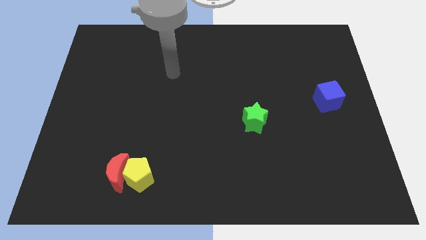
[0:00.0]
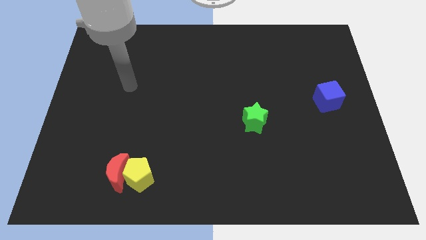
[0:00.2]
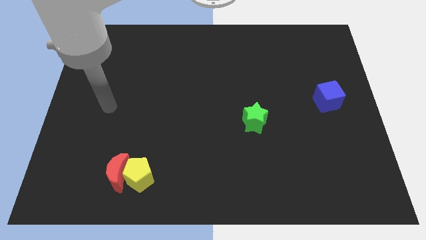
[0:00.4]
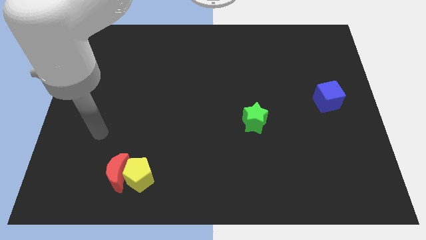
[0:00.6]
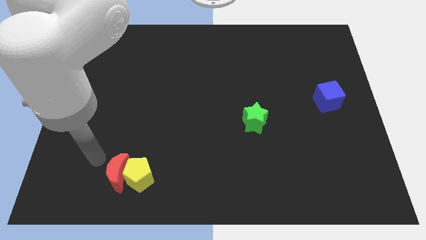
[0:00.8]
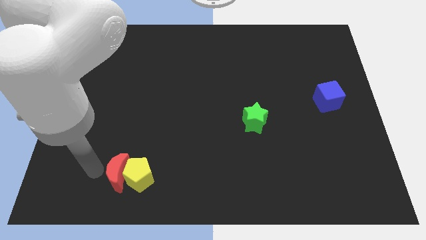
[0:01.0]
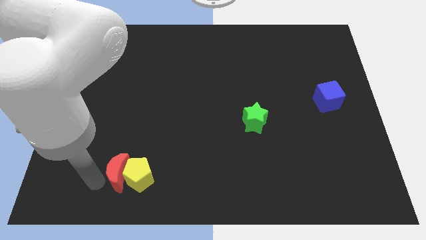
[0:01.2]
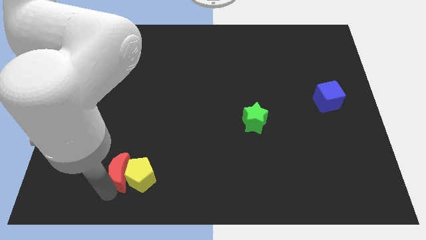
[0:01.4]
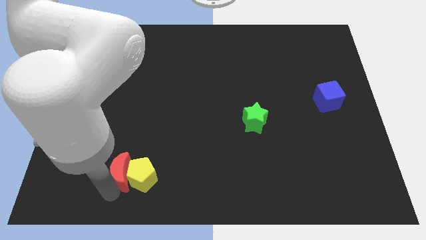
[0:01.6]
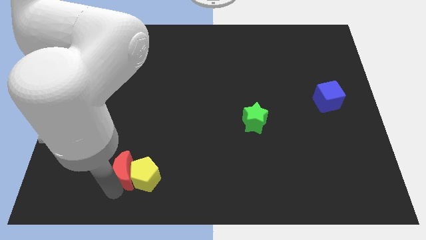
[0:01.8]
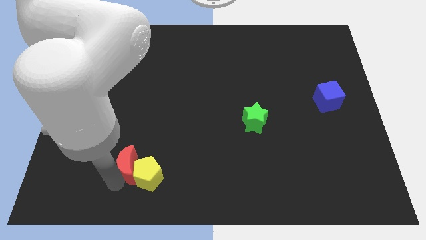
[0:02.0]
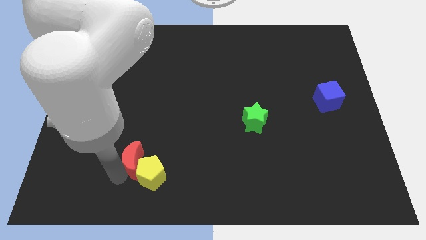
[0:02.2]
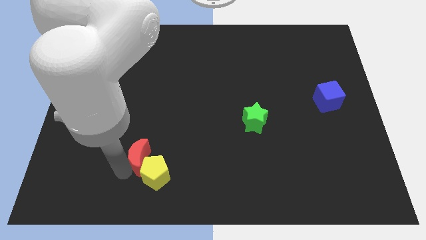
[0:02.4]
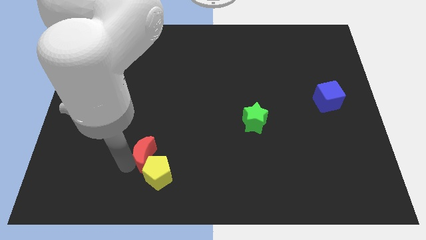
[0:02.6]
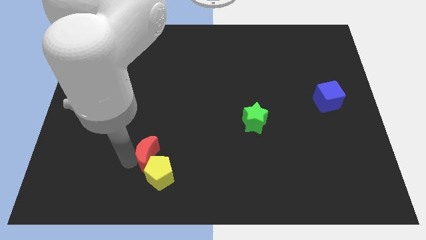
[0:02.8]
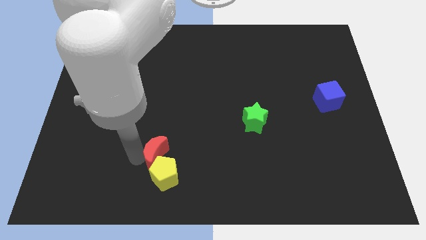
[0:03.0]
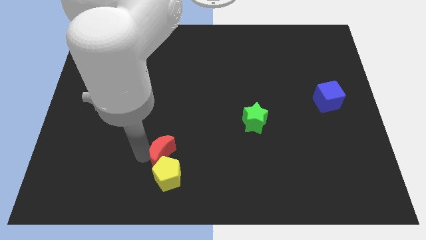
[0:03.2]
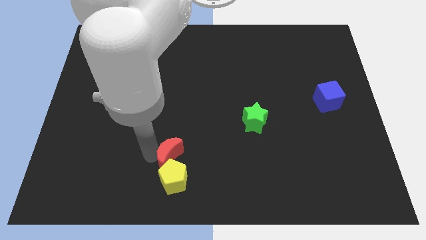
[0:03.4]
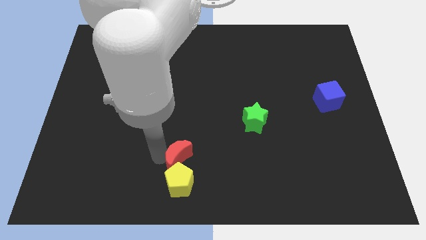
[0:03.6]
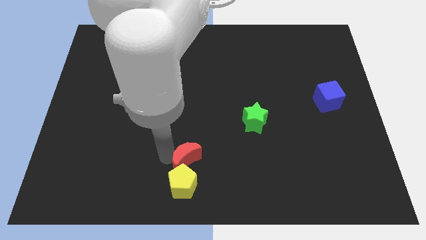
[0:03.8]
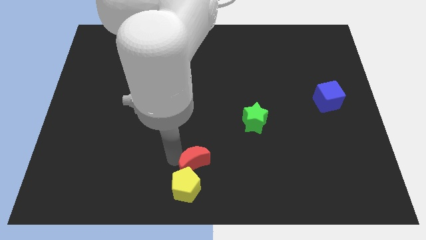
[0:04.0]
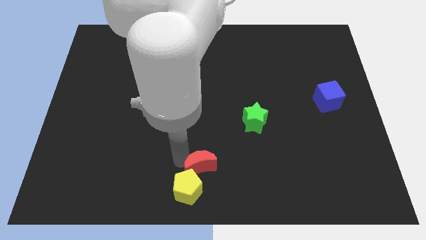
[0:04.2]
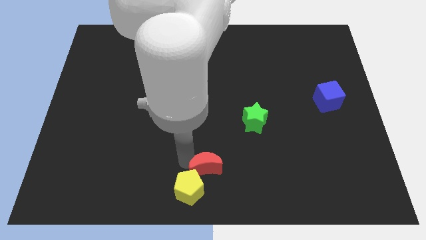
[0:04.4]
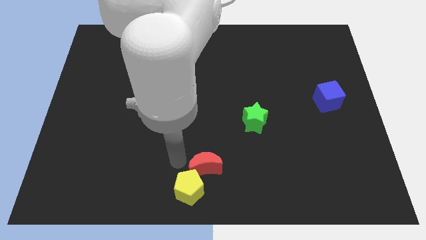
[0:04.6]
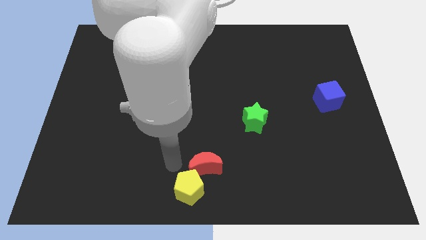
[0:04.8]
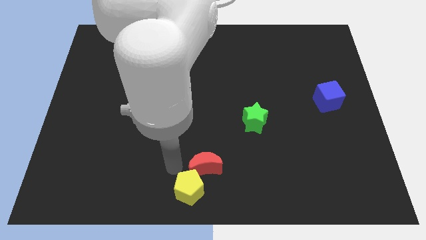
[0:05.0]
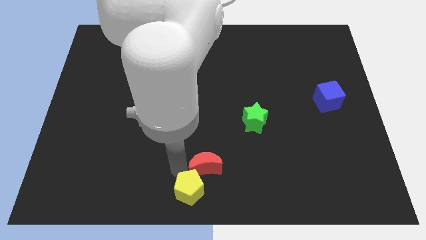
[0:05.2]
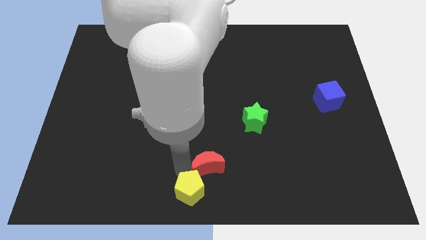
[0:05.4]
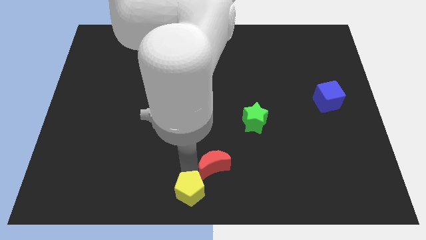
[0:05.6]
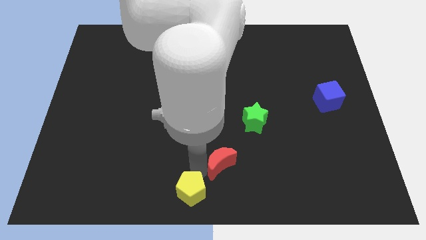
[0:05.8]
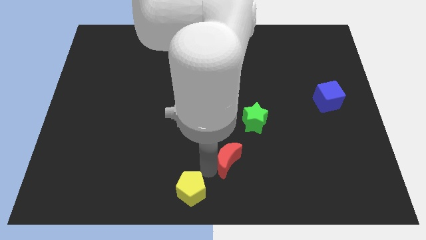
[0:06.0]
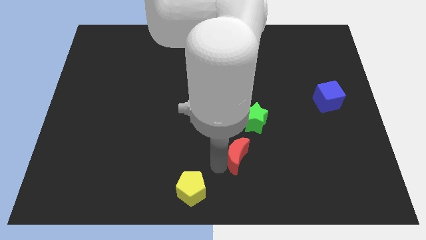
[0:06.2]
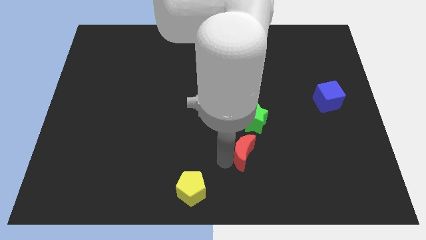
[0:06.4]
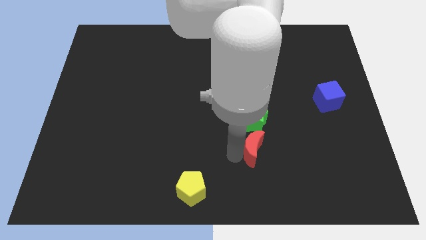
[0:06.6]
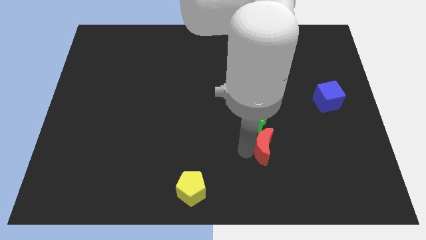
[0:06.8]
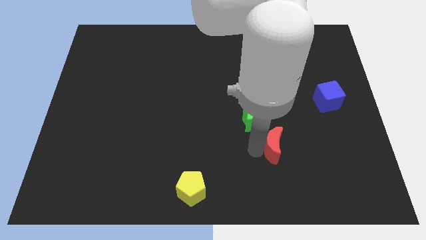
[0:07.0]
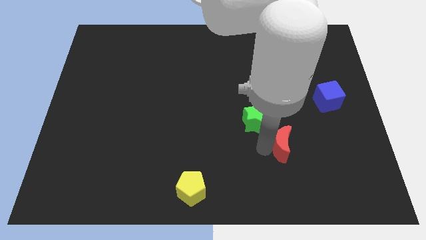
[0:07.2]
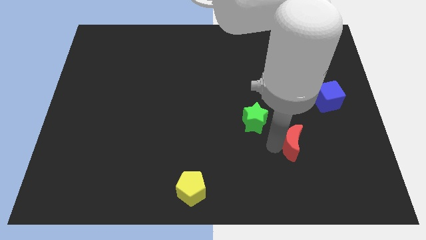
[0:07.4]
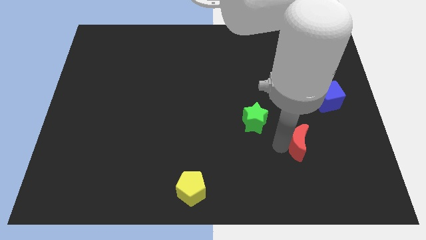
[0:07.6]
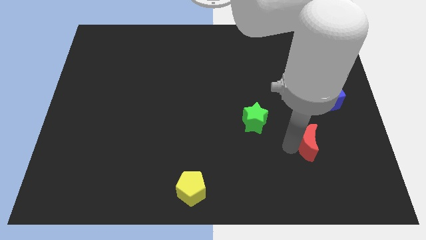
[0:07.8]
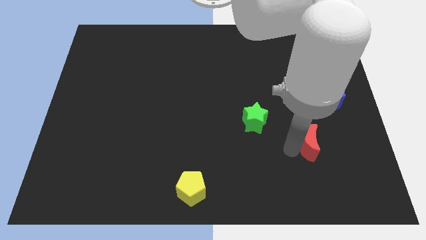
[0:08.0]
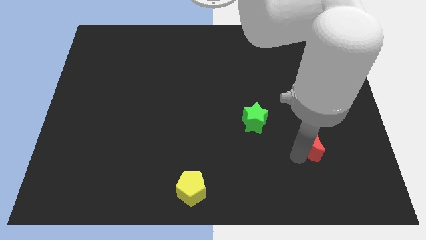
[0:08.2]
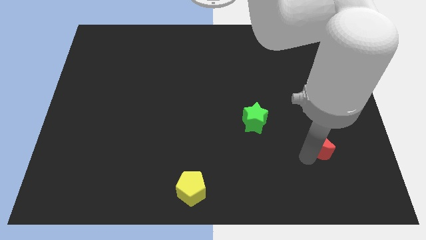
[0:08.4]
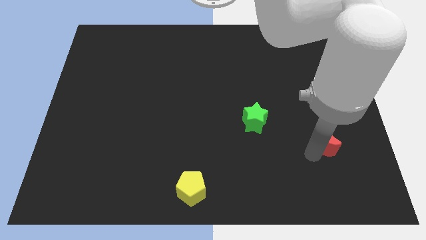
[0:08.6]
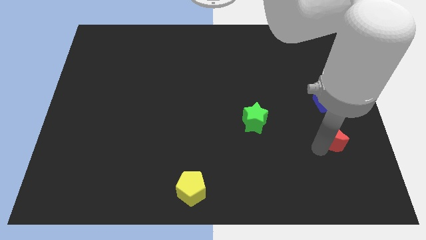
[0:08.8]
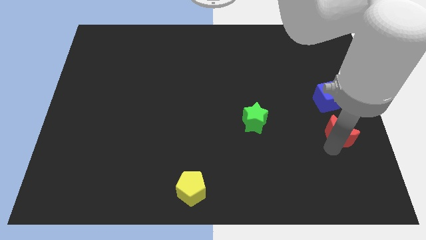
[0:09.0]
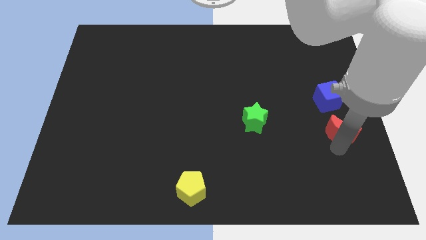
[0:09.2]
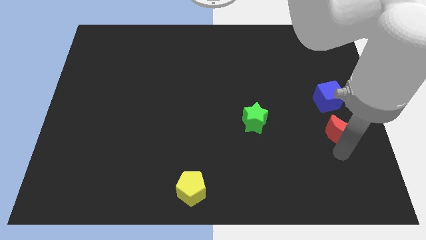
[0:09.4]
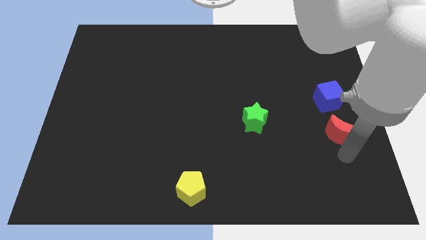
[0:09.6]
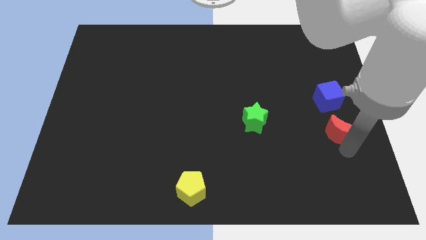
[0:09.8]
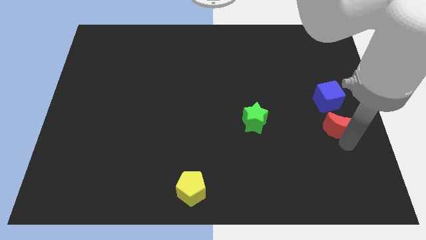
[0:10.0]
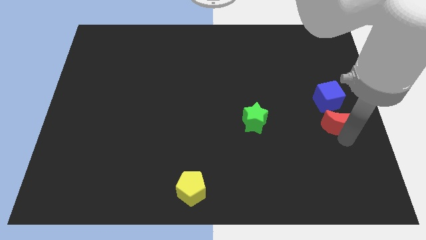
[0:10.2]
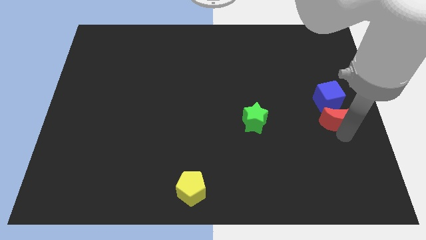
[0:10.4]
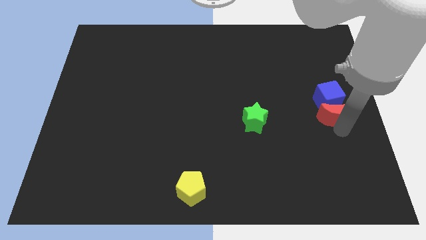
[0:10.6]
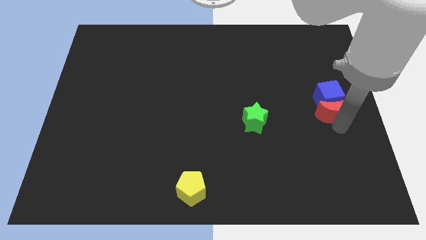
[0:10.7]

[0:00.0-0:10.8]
move the red block close to the blue block

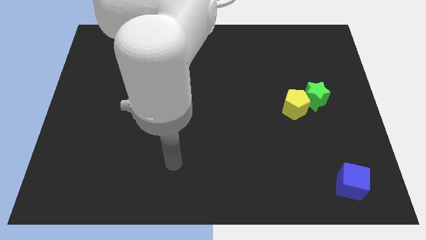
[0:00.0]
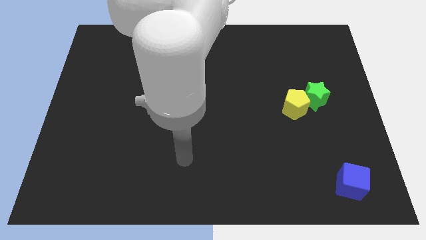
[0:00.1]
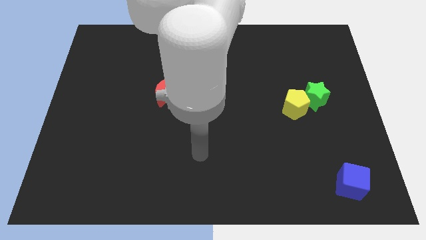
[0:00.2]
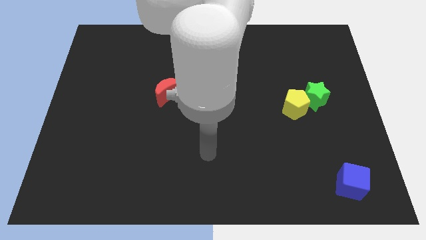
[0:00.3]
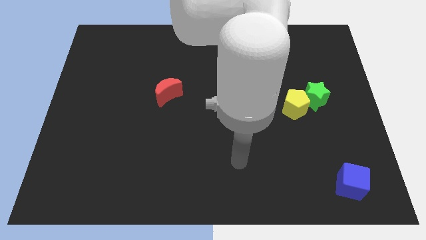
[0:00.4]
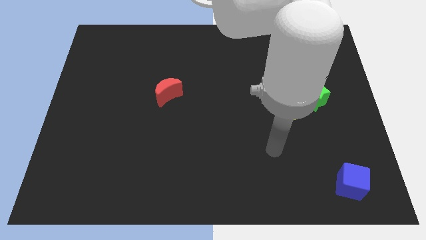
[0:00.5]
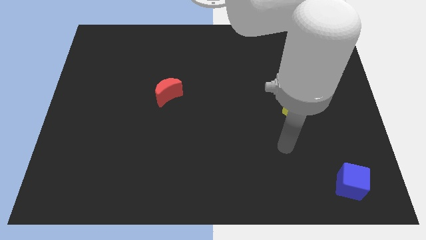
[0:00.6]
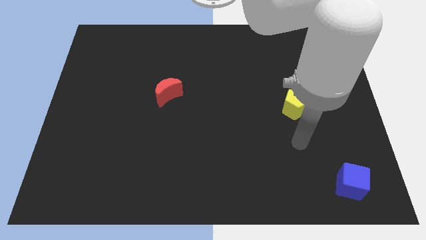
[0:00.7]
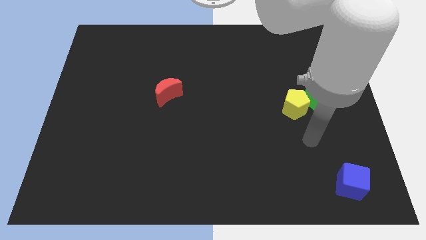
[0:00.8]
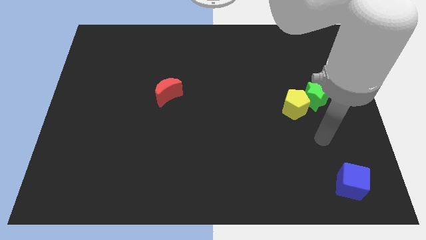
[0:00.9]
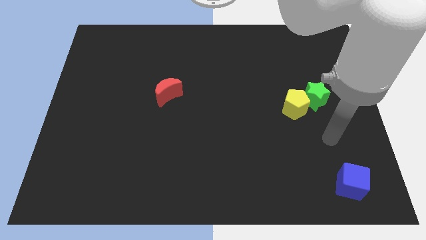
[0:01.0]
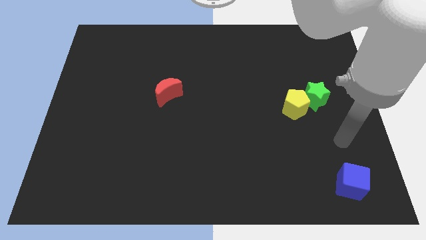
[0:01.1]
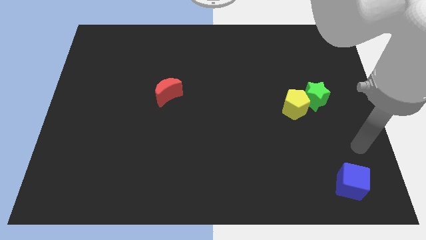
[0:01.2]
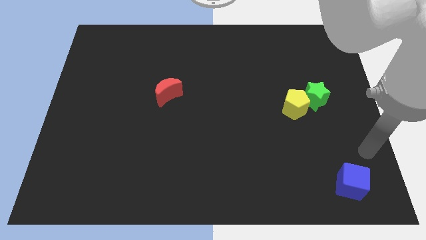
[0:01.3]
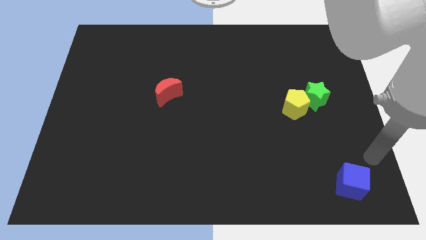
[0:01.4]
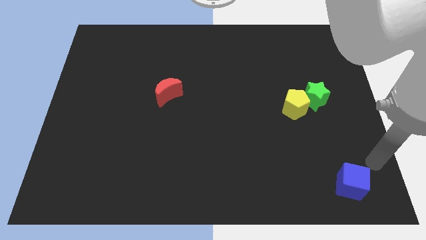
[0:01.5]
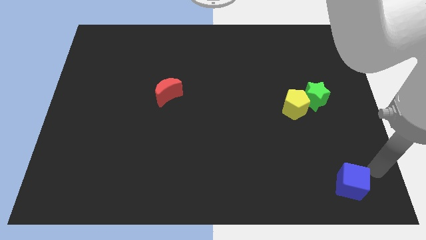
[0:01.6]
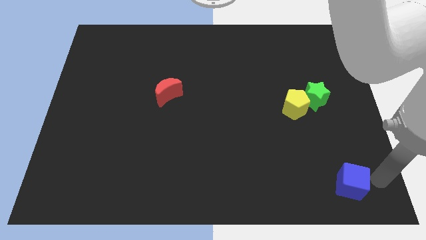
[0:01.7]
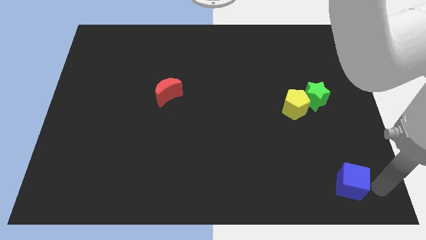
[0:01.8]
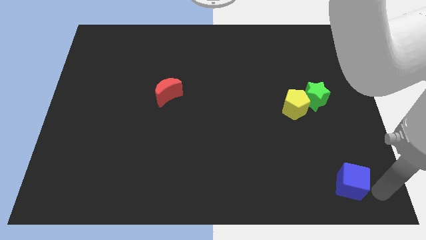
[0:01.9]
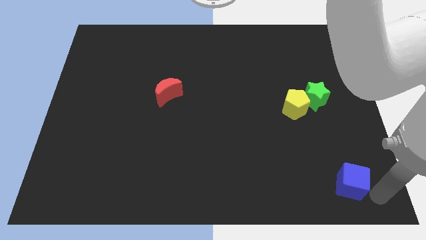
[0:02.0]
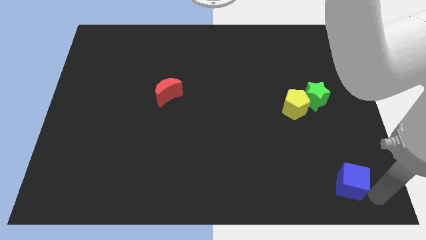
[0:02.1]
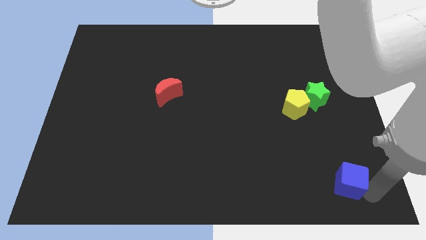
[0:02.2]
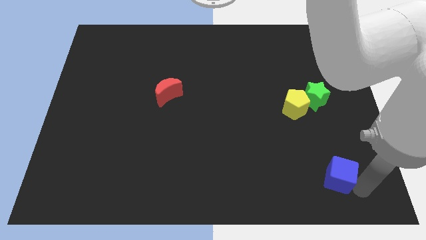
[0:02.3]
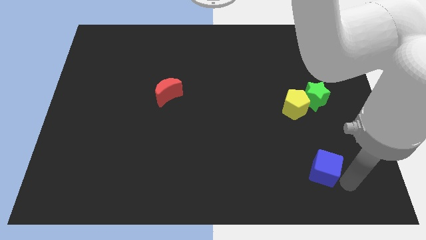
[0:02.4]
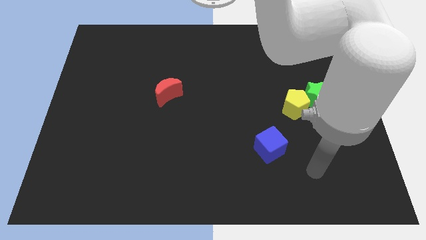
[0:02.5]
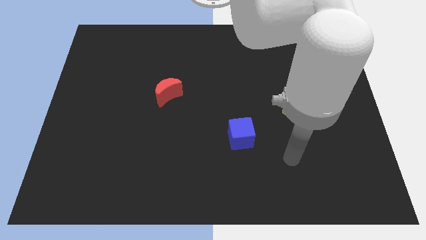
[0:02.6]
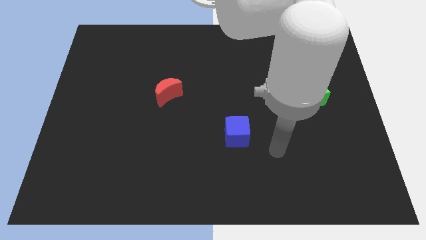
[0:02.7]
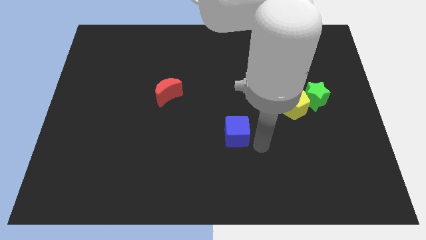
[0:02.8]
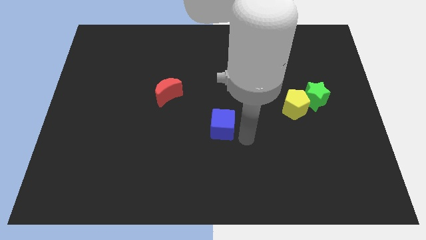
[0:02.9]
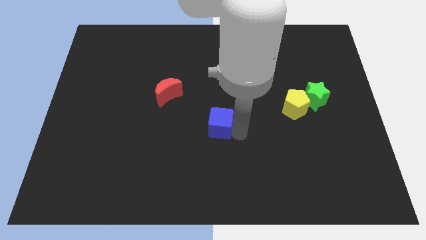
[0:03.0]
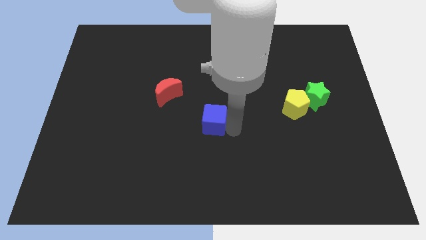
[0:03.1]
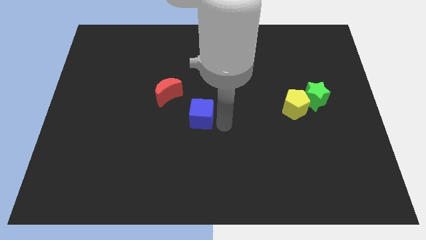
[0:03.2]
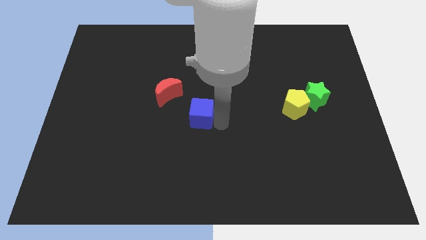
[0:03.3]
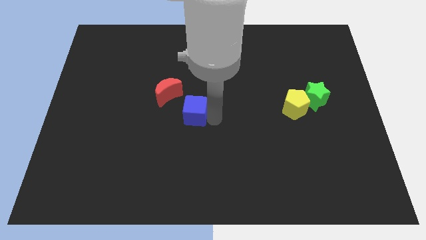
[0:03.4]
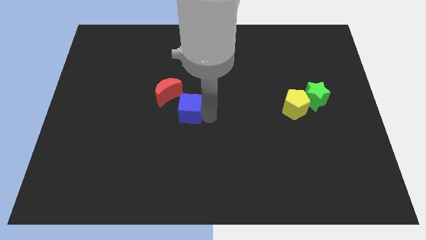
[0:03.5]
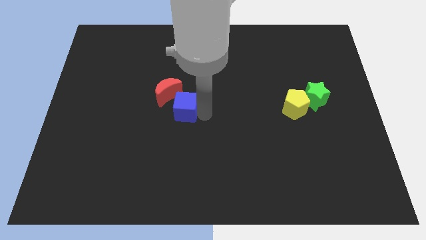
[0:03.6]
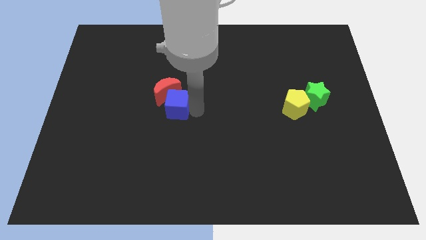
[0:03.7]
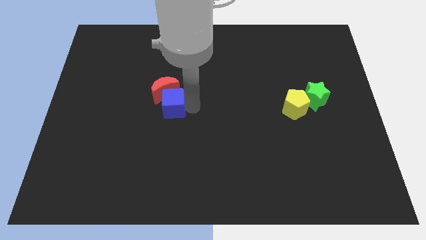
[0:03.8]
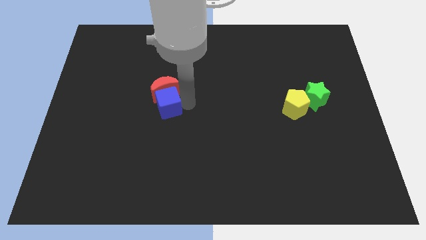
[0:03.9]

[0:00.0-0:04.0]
put the blue cube close to the red moon
